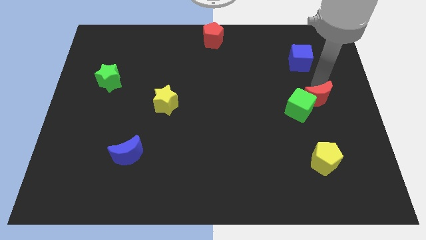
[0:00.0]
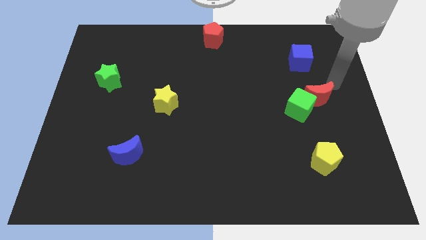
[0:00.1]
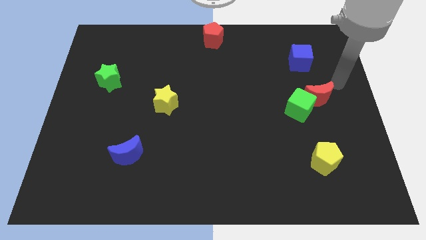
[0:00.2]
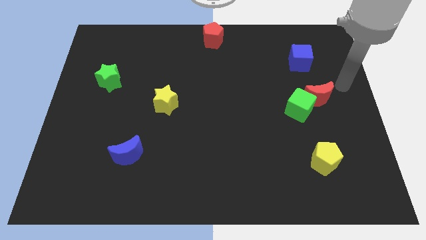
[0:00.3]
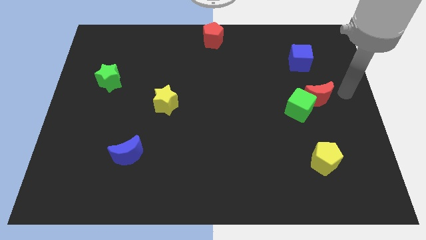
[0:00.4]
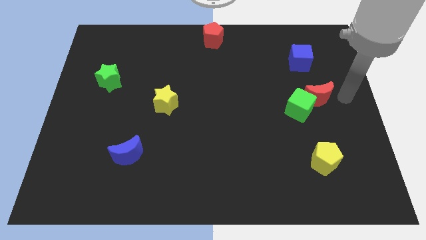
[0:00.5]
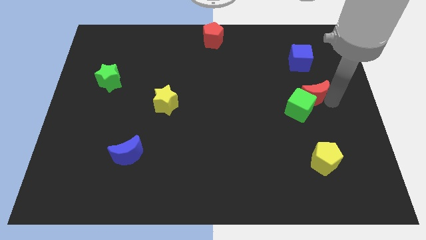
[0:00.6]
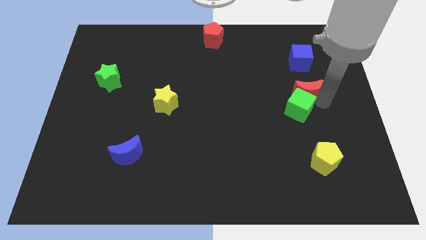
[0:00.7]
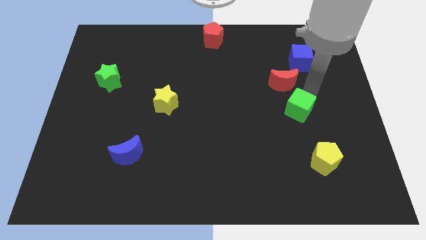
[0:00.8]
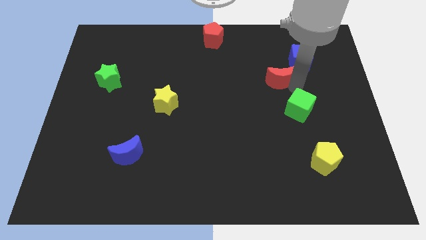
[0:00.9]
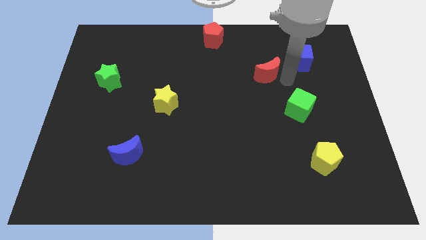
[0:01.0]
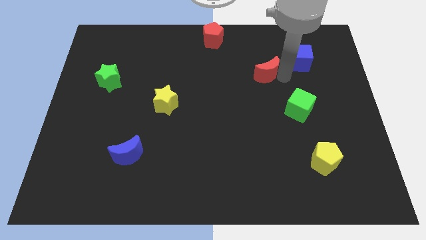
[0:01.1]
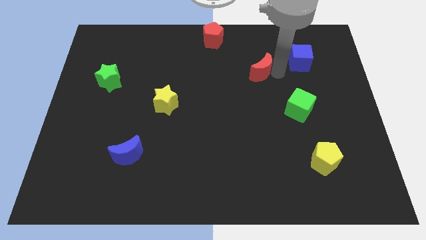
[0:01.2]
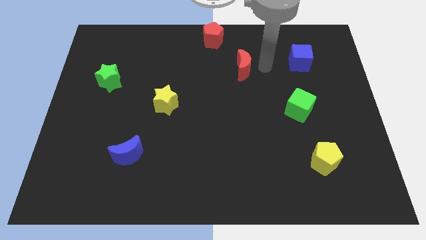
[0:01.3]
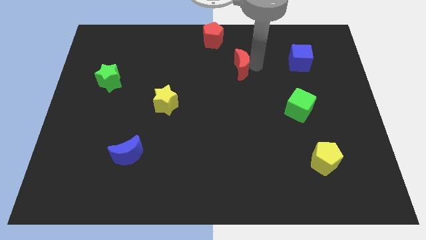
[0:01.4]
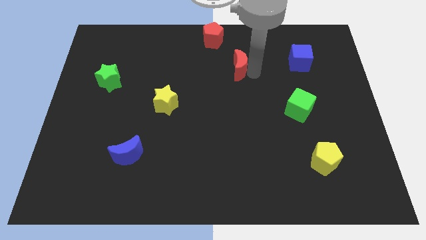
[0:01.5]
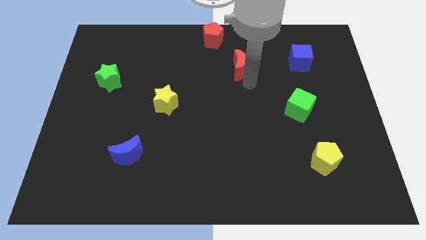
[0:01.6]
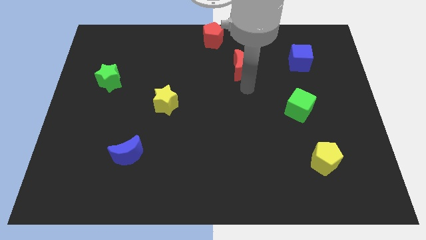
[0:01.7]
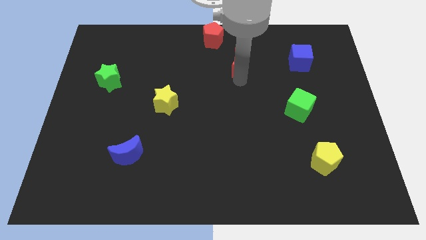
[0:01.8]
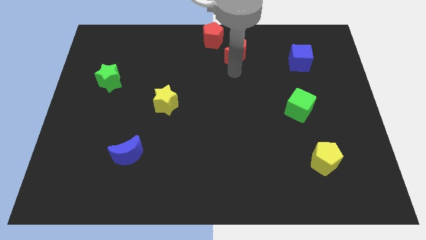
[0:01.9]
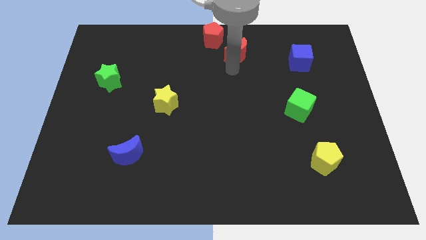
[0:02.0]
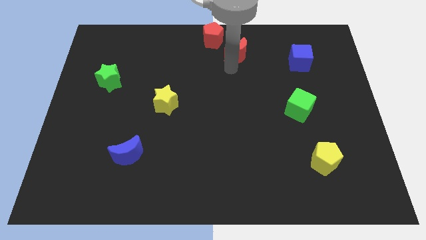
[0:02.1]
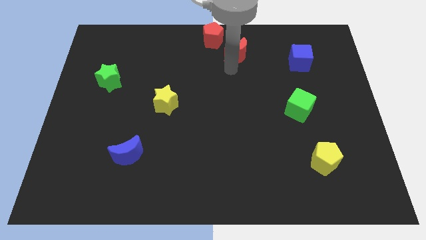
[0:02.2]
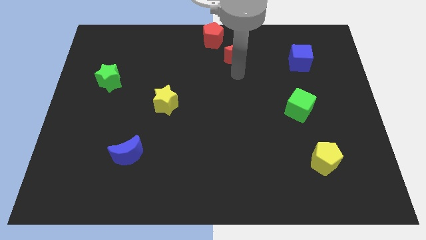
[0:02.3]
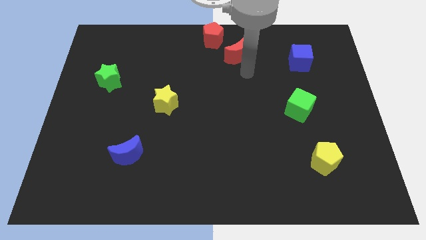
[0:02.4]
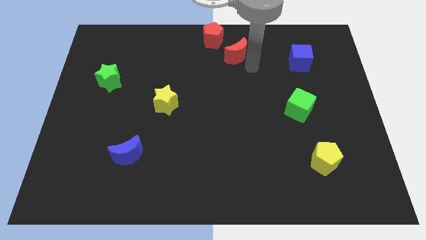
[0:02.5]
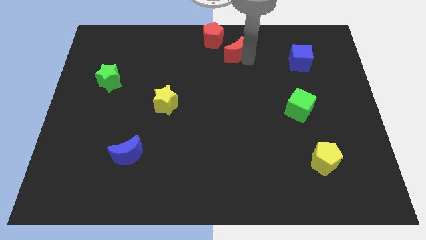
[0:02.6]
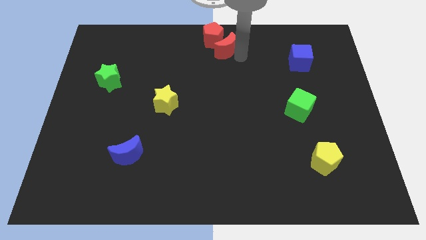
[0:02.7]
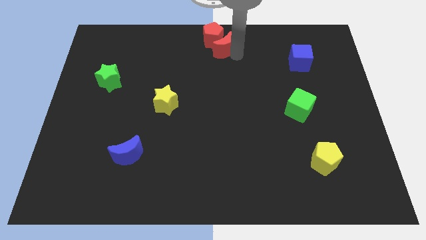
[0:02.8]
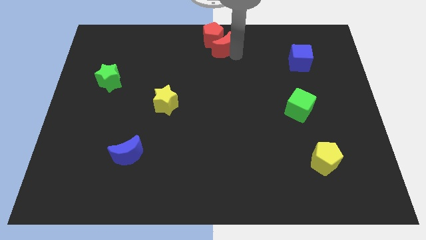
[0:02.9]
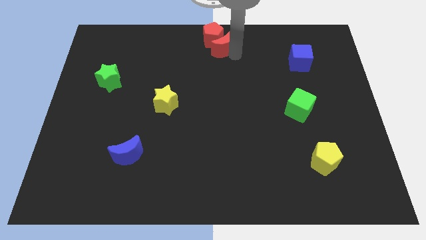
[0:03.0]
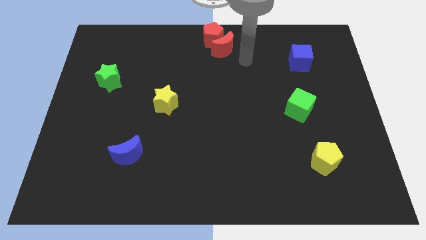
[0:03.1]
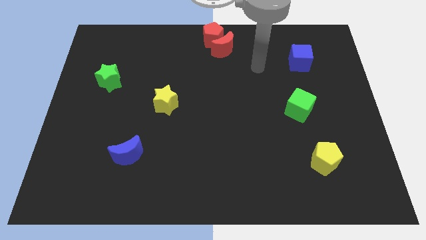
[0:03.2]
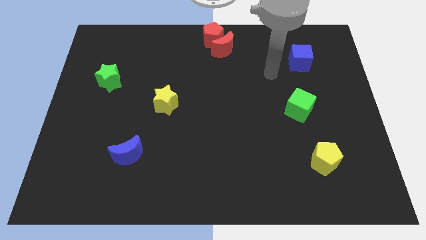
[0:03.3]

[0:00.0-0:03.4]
move red moon into red pentagon

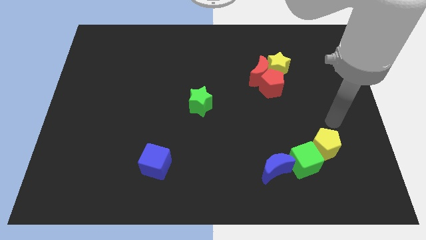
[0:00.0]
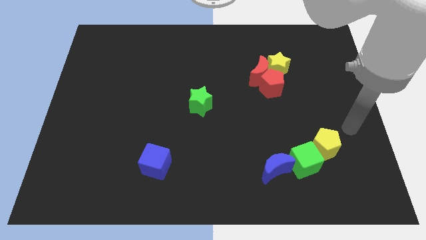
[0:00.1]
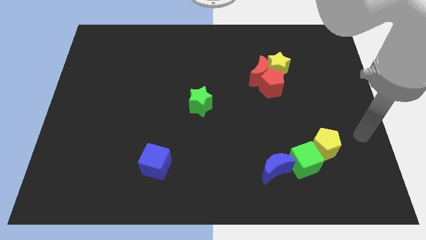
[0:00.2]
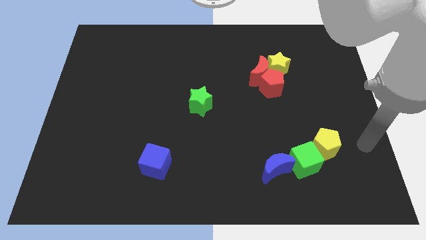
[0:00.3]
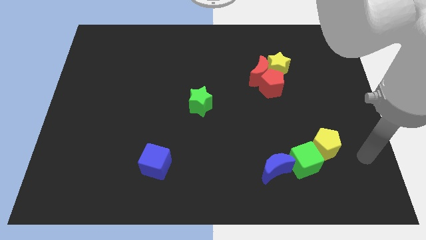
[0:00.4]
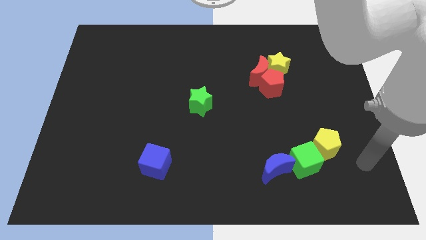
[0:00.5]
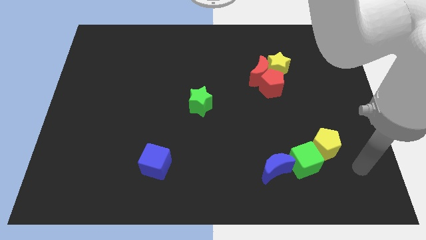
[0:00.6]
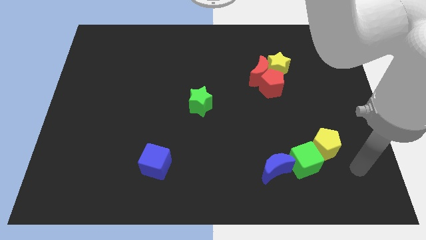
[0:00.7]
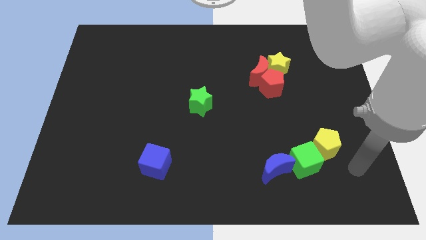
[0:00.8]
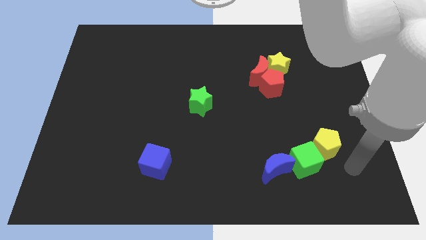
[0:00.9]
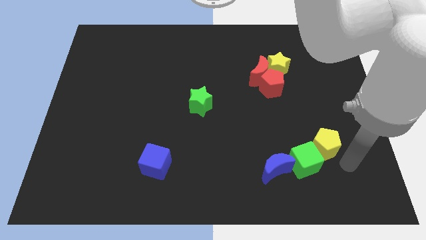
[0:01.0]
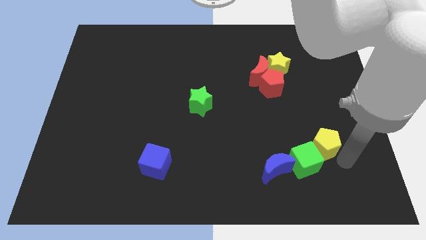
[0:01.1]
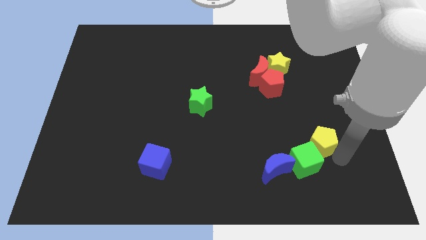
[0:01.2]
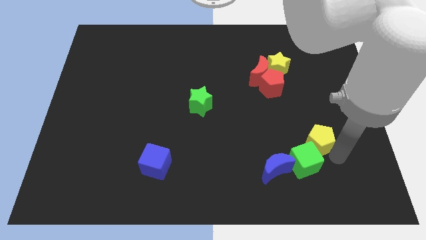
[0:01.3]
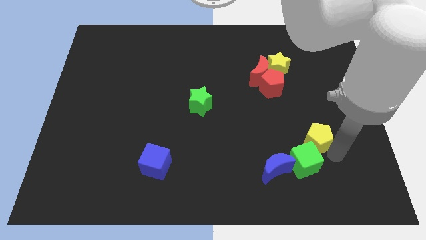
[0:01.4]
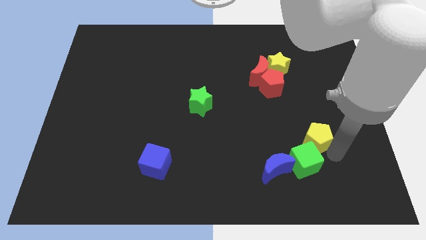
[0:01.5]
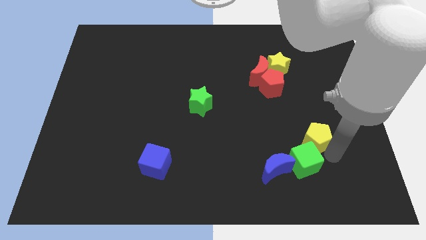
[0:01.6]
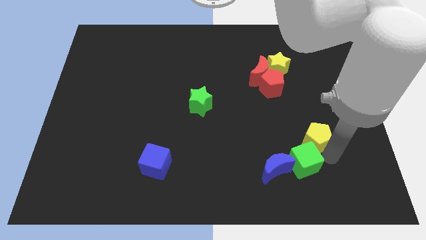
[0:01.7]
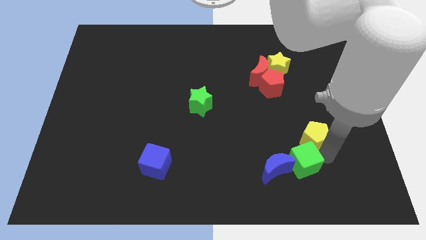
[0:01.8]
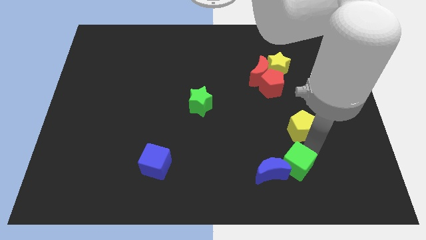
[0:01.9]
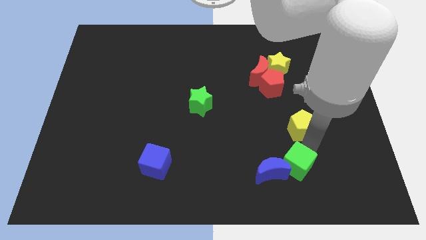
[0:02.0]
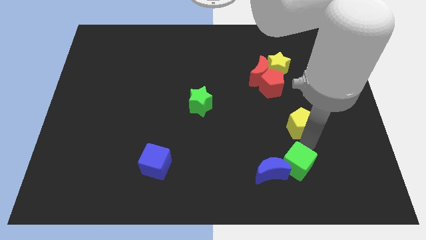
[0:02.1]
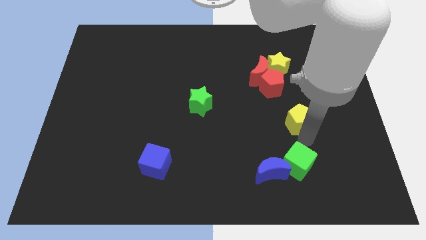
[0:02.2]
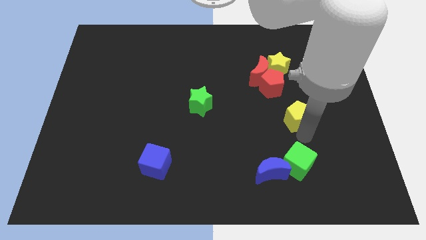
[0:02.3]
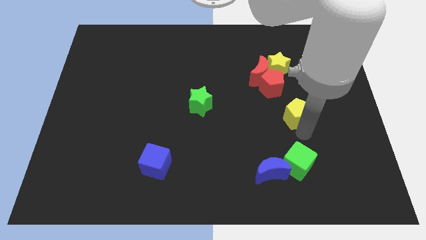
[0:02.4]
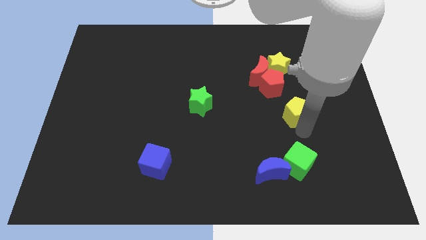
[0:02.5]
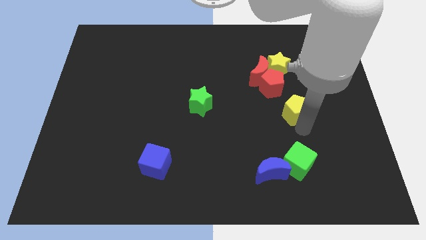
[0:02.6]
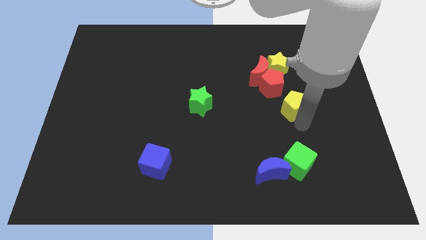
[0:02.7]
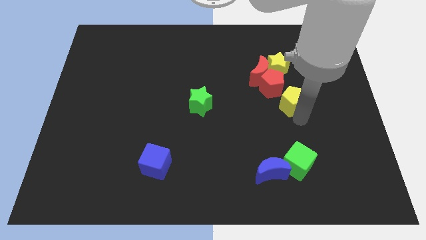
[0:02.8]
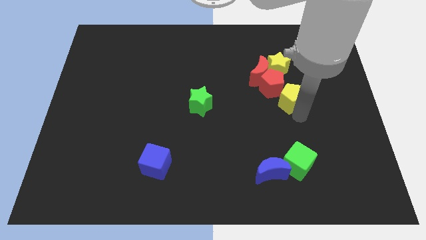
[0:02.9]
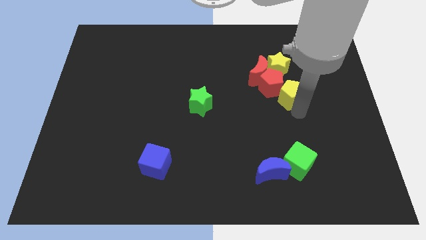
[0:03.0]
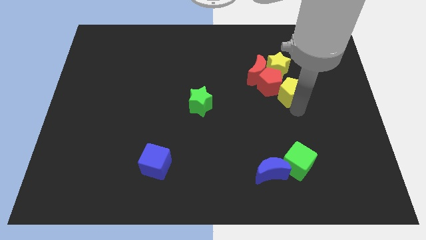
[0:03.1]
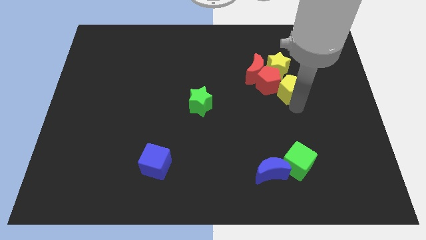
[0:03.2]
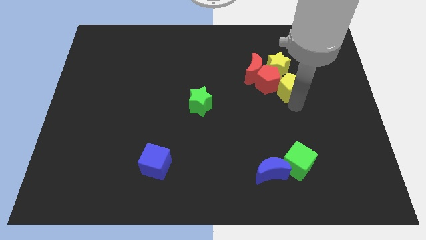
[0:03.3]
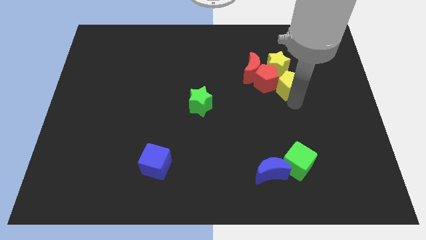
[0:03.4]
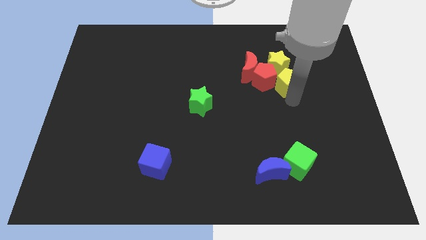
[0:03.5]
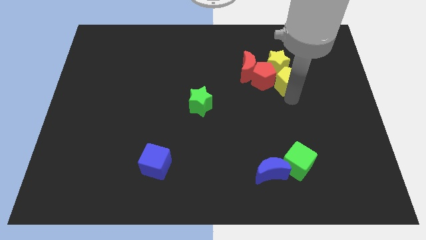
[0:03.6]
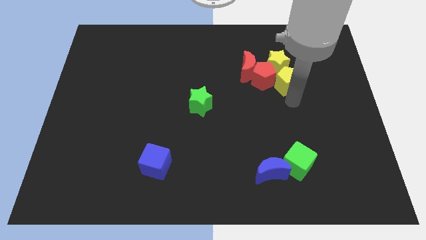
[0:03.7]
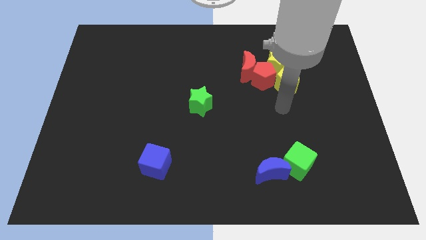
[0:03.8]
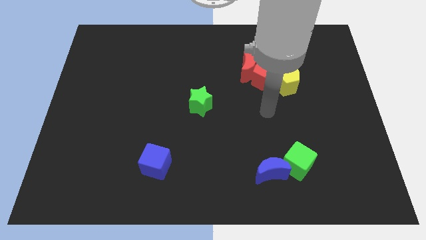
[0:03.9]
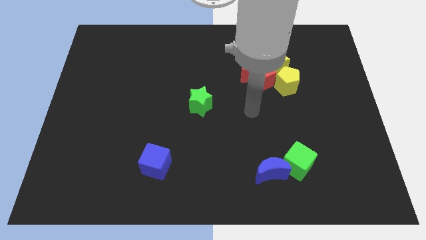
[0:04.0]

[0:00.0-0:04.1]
push the yellow pentagon into the yellow star

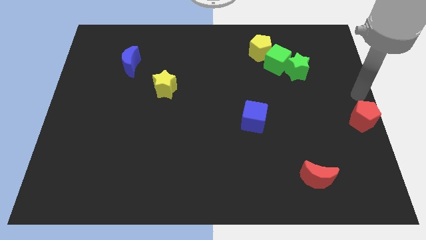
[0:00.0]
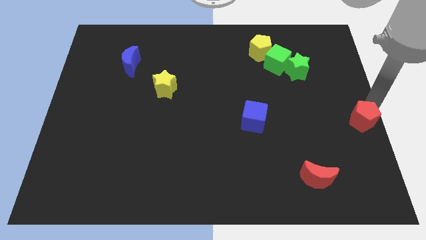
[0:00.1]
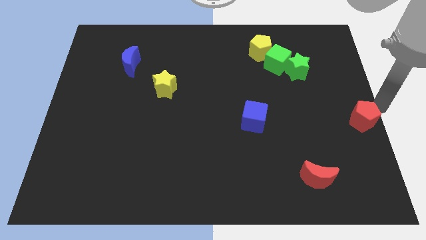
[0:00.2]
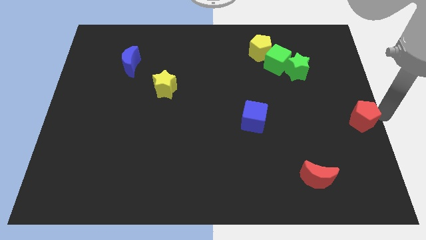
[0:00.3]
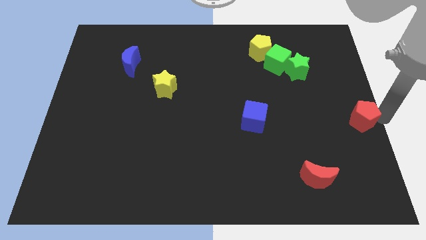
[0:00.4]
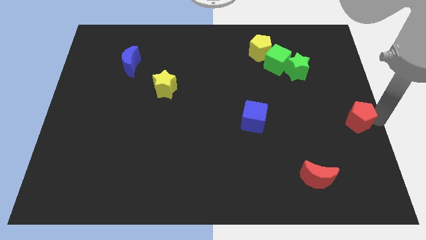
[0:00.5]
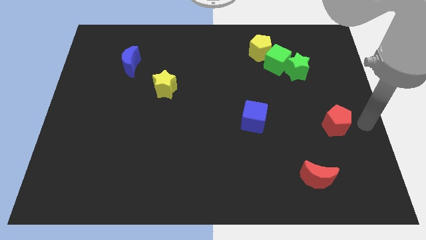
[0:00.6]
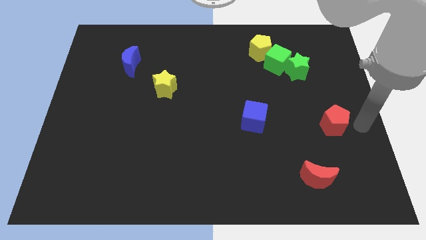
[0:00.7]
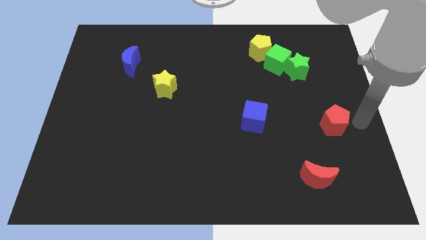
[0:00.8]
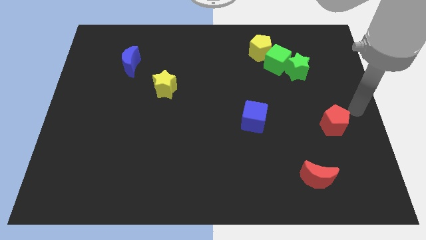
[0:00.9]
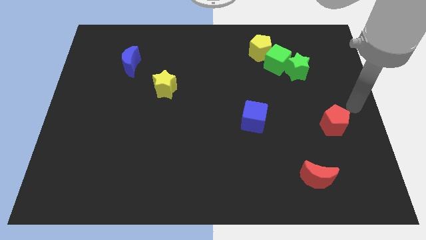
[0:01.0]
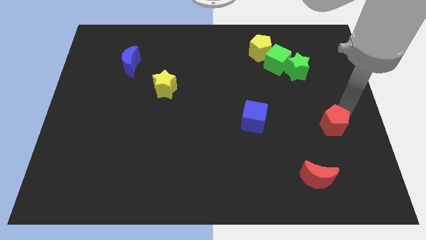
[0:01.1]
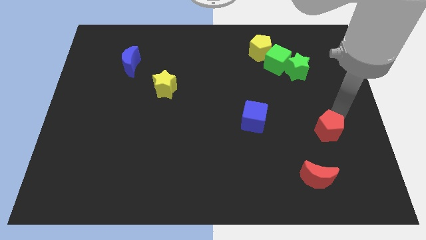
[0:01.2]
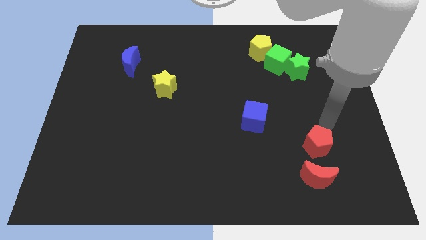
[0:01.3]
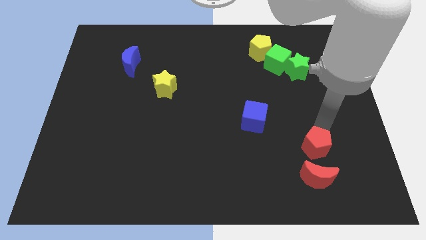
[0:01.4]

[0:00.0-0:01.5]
place the red pentagon to the top side of the red moon
